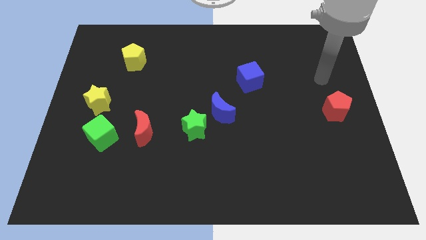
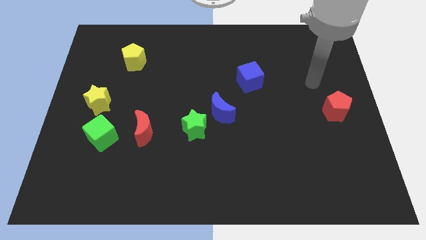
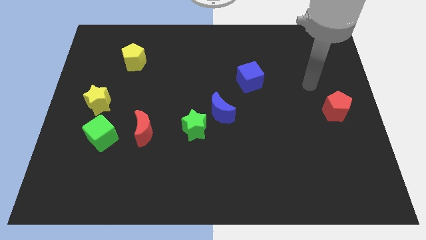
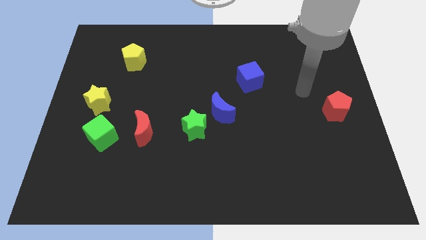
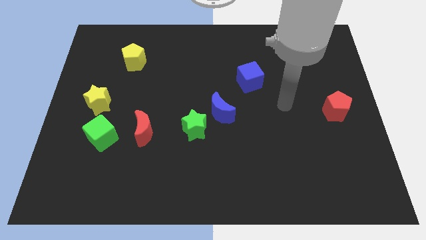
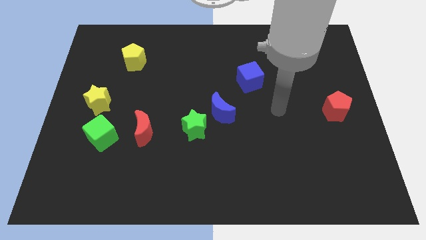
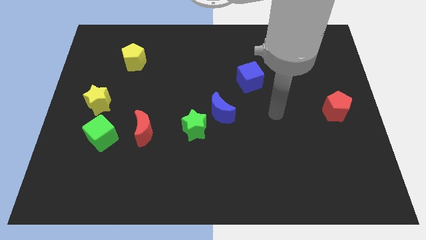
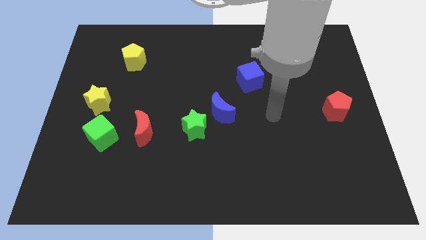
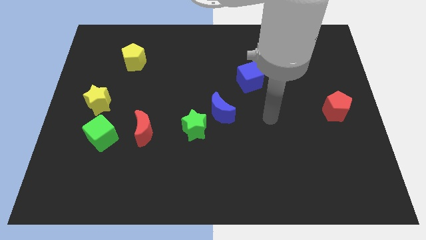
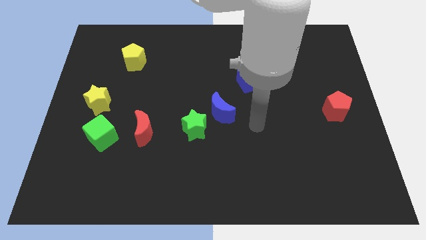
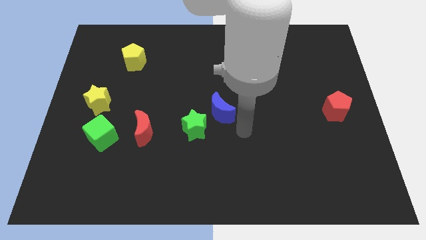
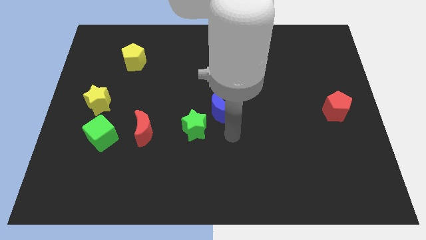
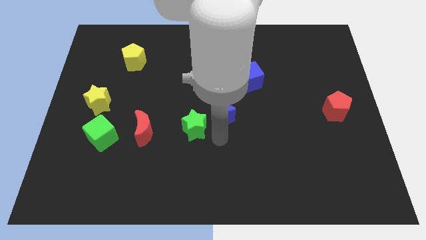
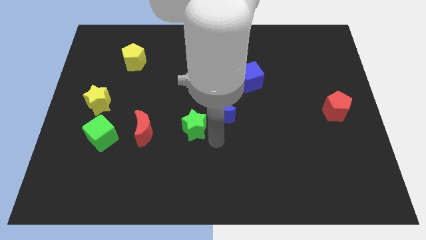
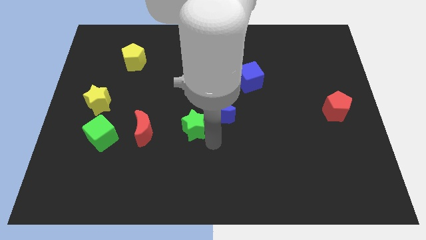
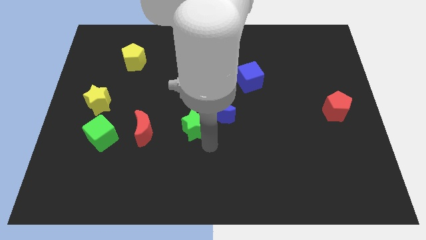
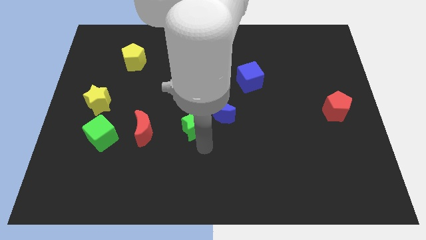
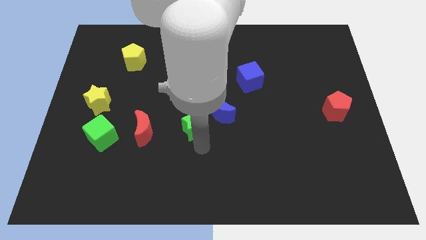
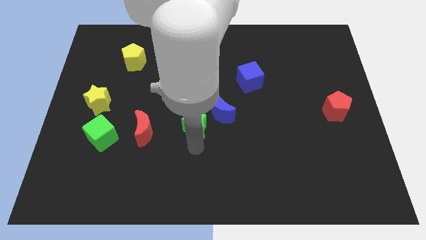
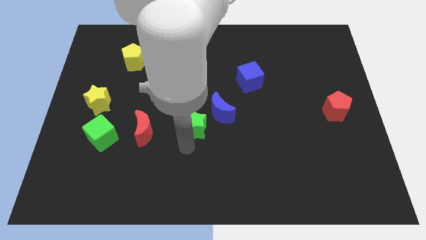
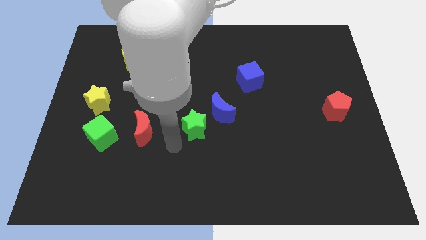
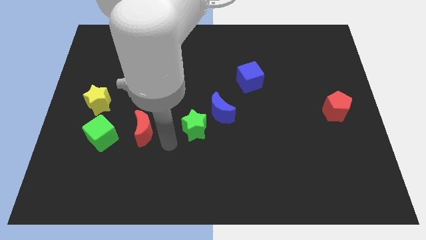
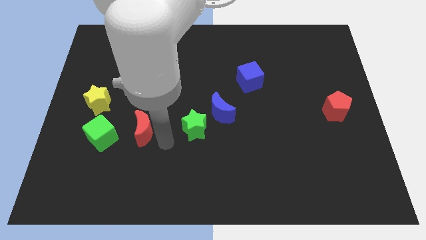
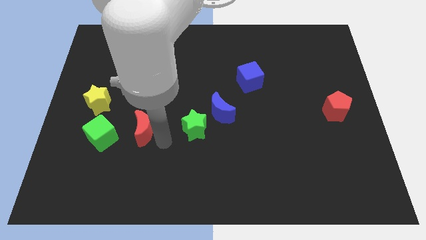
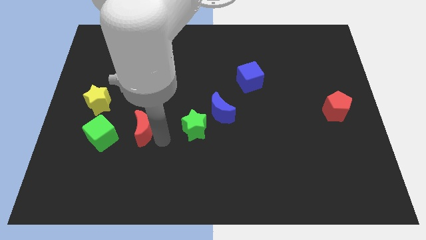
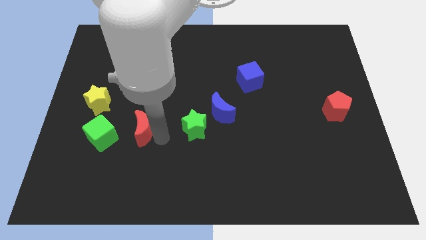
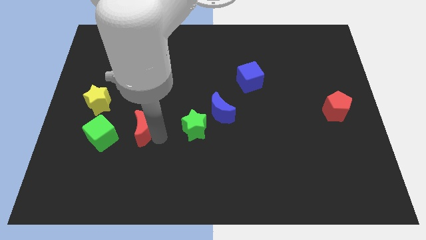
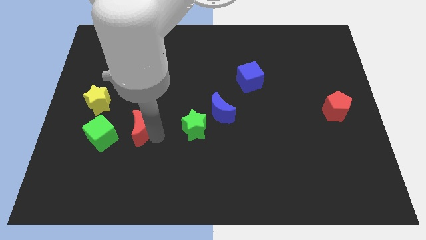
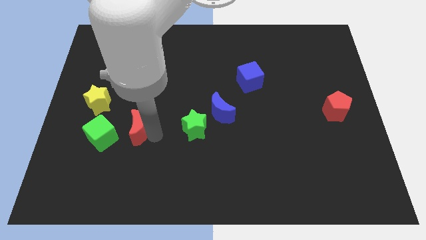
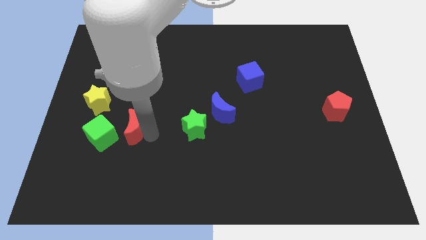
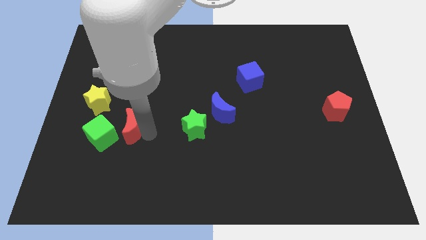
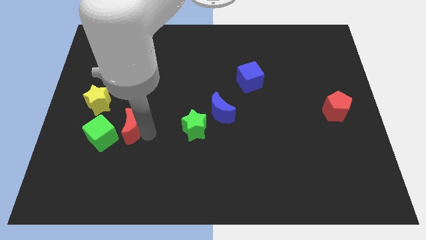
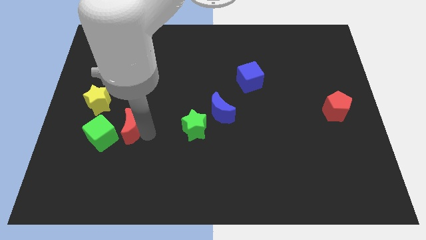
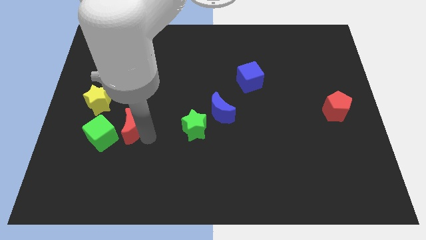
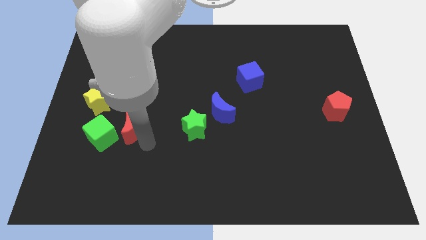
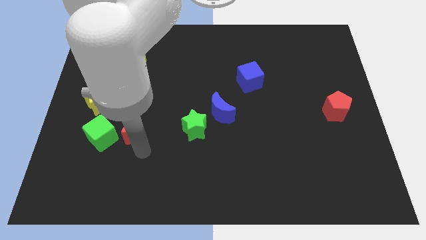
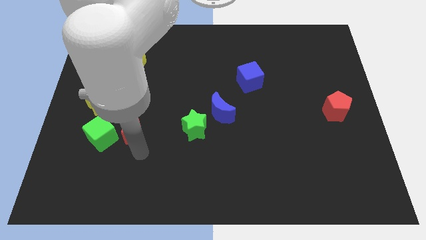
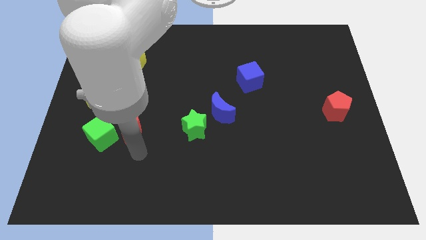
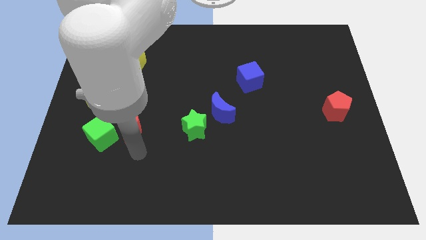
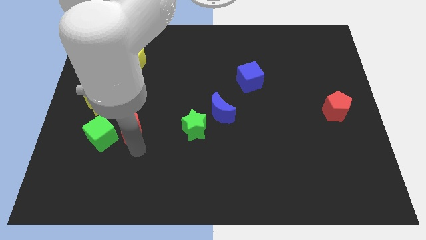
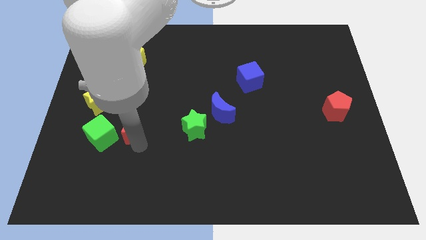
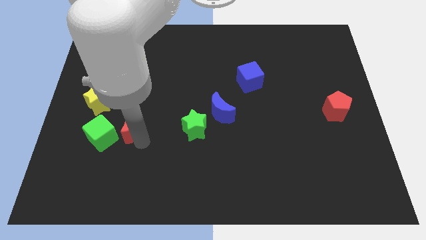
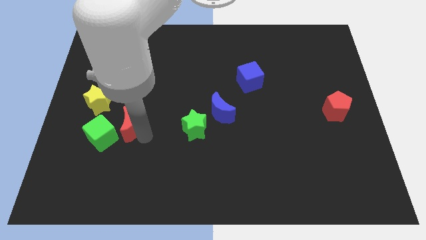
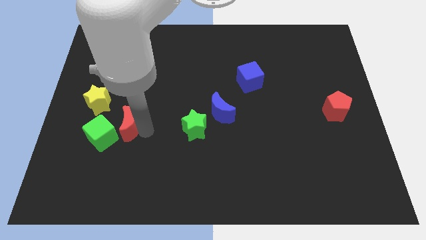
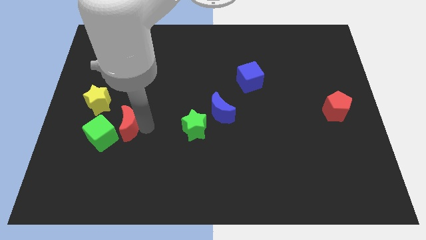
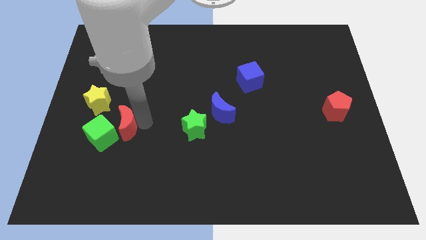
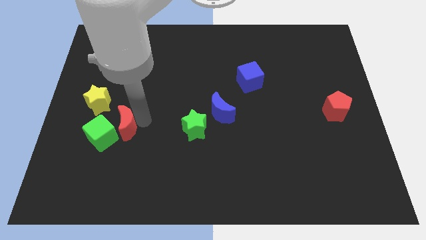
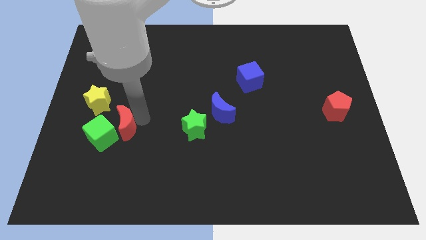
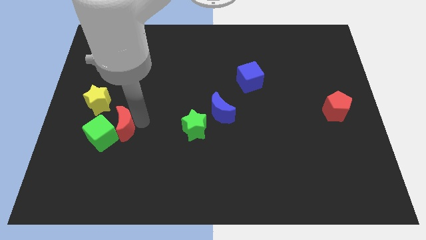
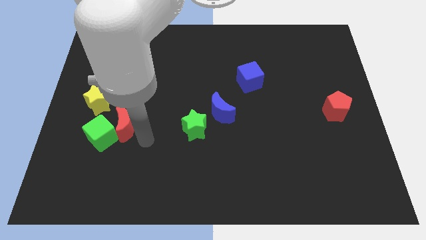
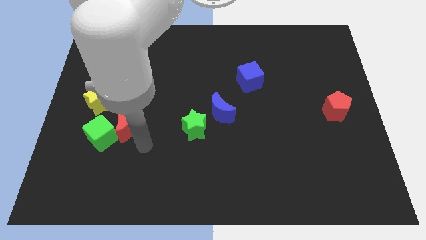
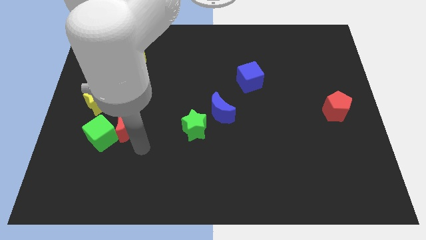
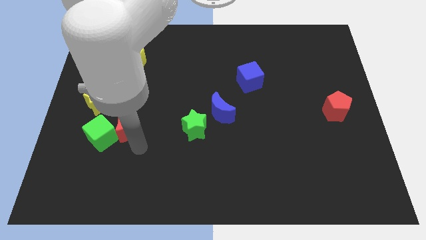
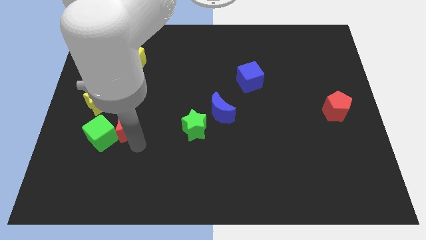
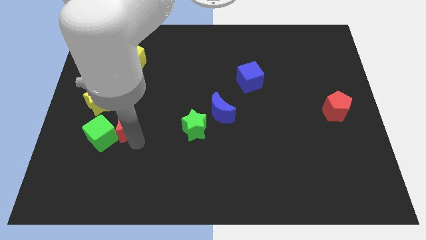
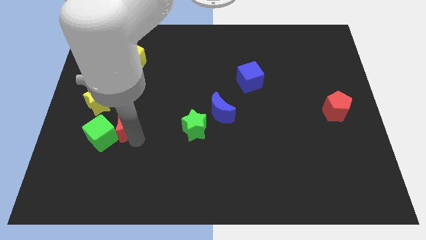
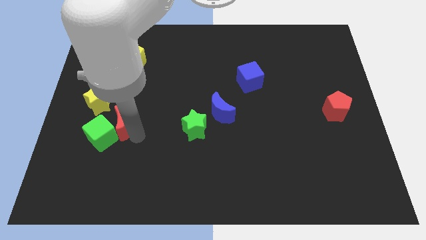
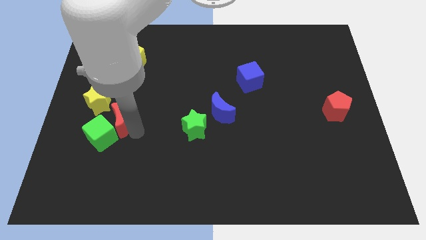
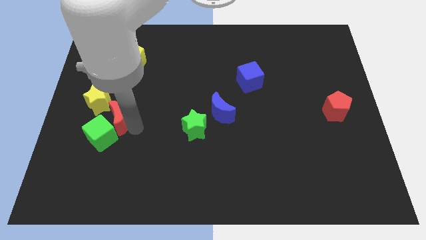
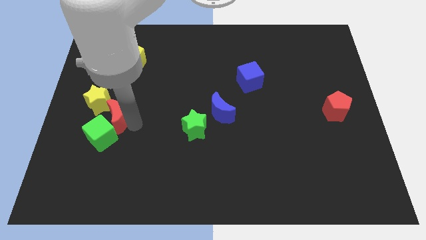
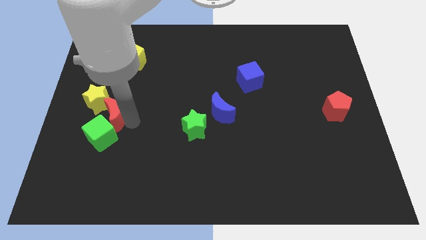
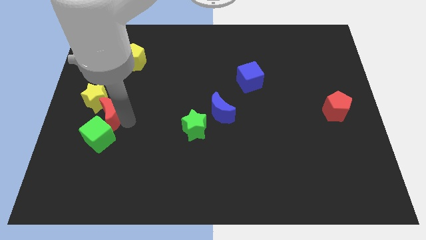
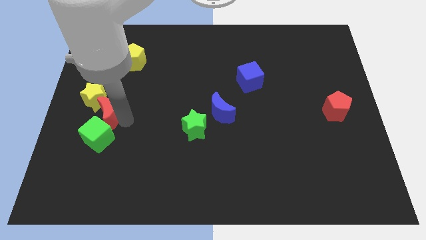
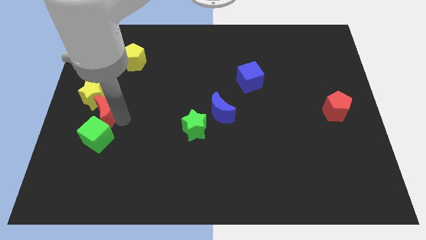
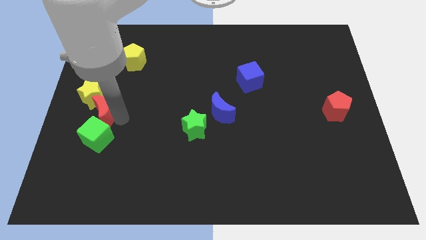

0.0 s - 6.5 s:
push the red moon close to the yellow star

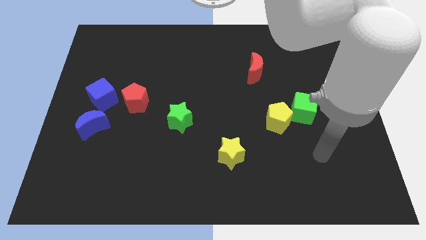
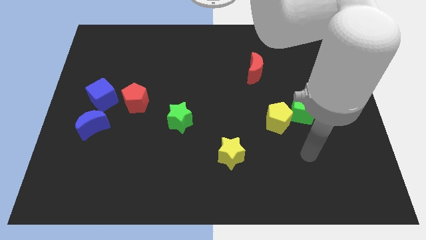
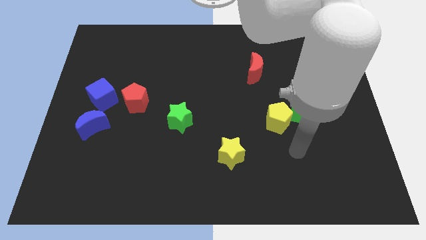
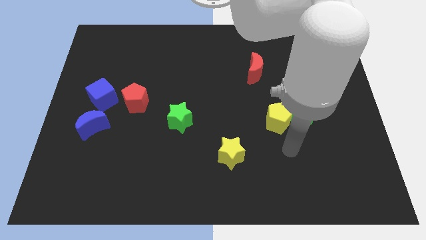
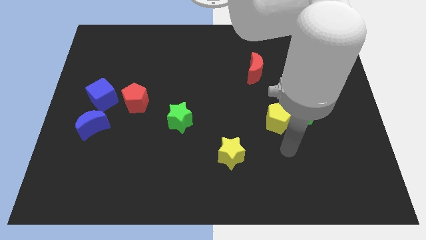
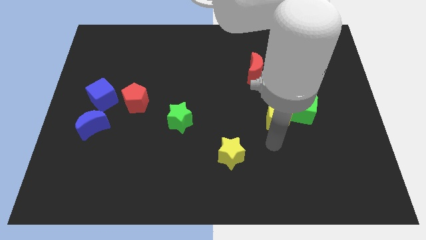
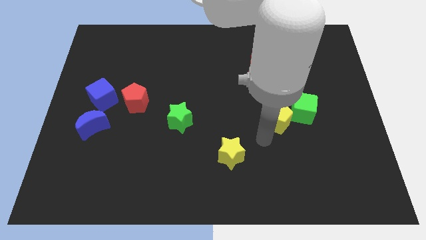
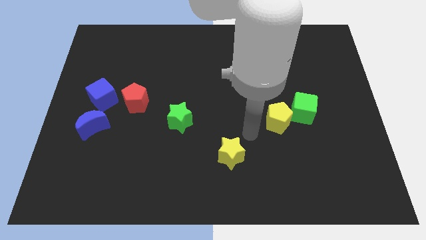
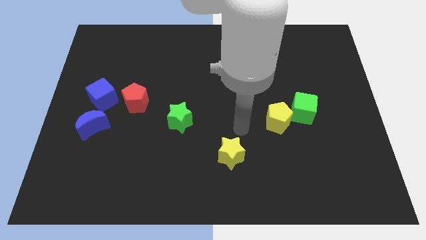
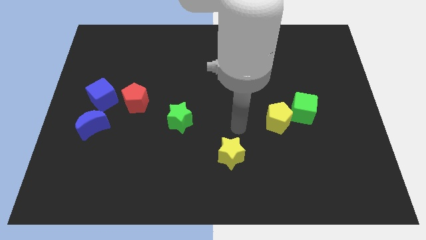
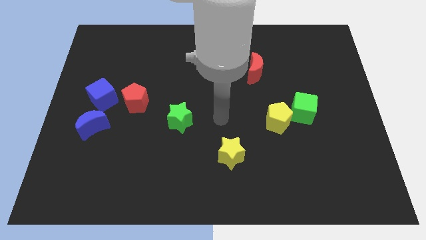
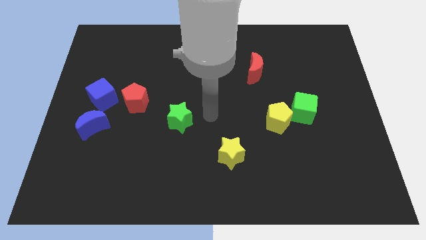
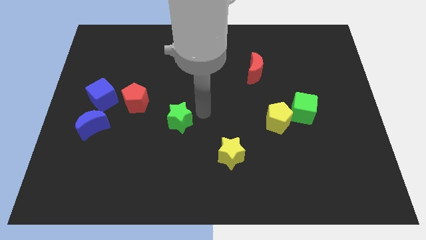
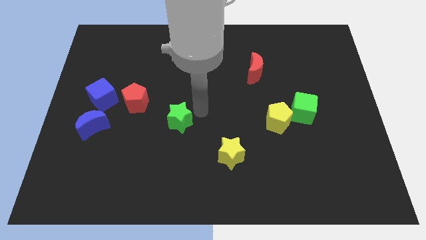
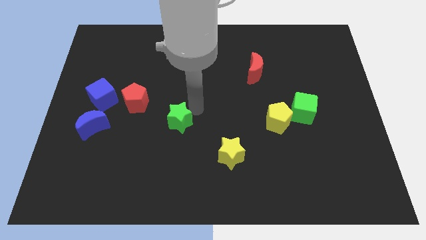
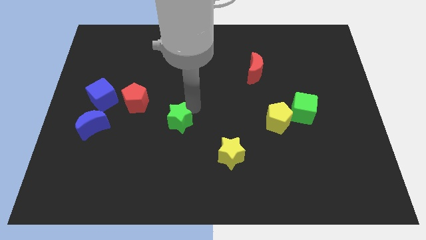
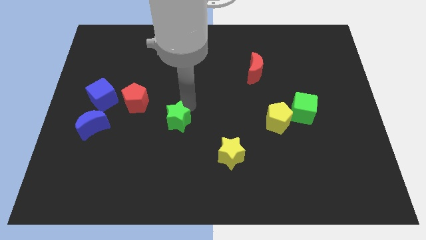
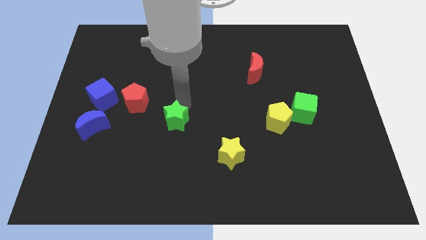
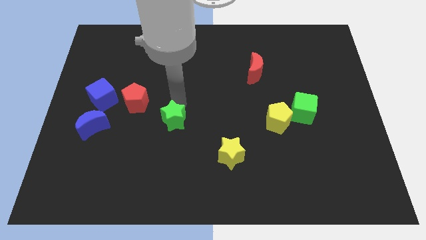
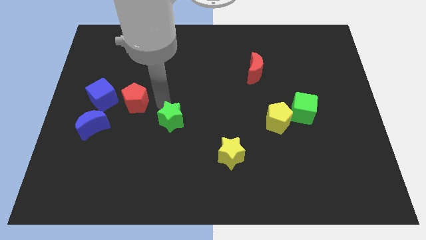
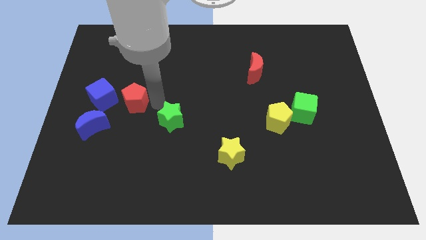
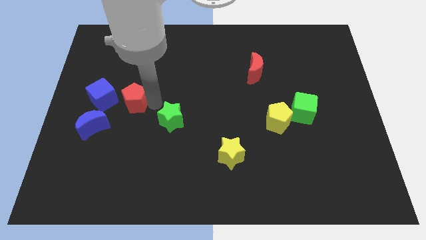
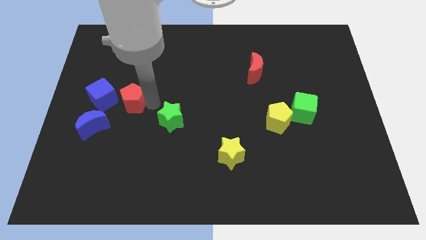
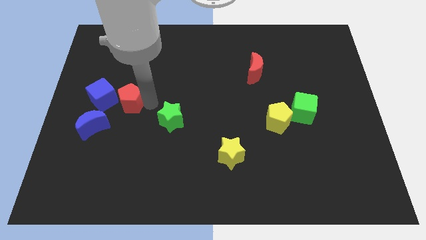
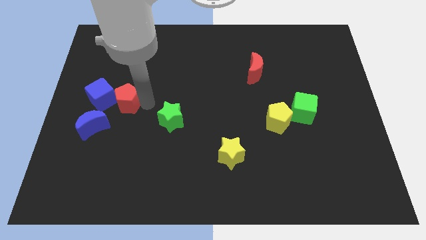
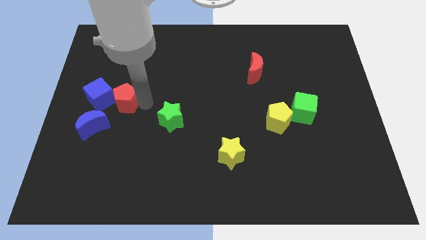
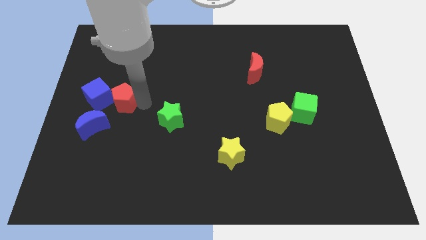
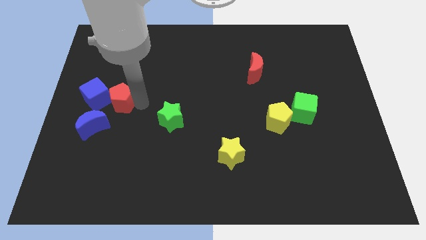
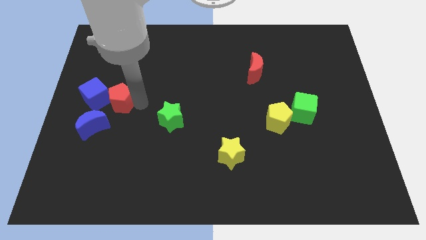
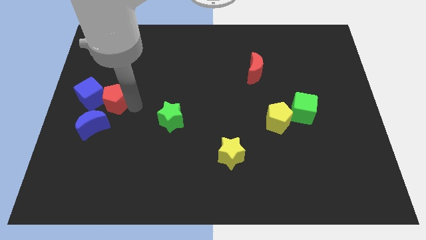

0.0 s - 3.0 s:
push the red pentagon close to the blue cube
